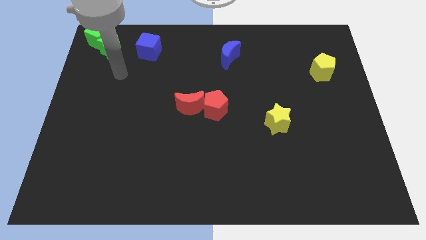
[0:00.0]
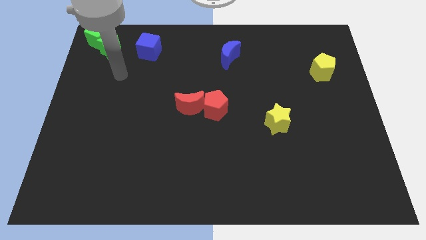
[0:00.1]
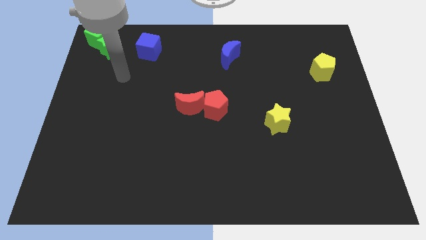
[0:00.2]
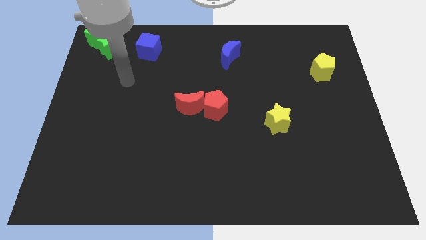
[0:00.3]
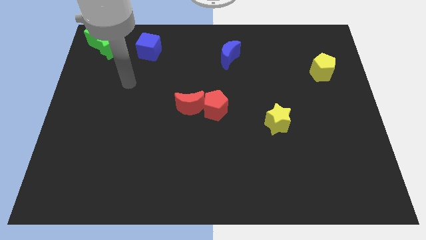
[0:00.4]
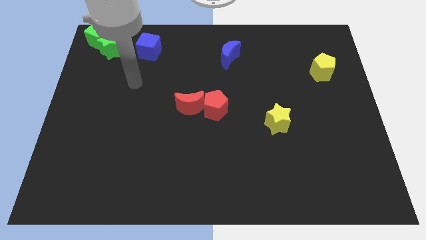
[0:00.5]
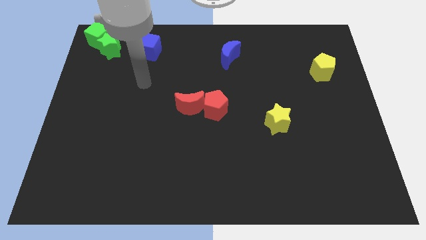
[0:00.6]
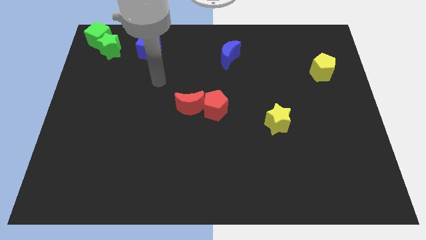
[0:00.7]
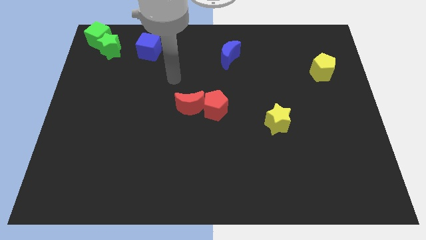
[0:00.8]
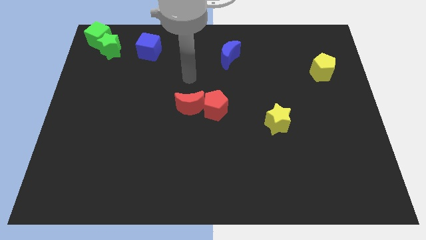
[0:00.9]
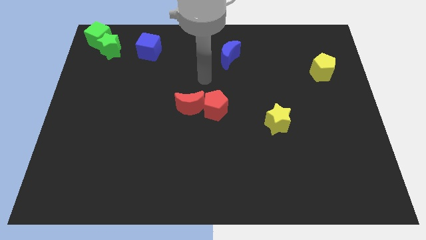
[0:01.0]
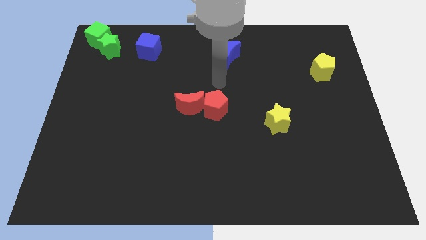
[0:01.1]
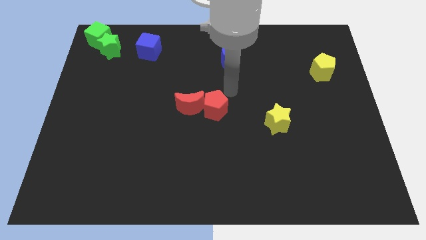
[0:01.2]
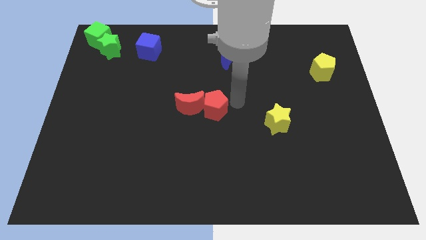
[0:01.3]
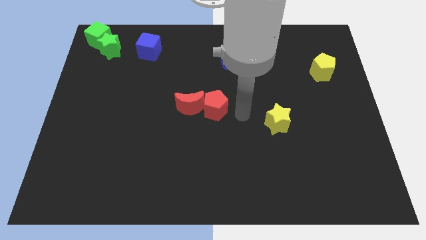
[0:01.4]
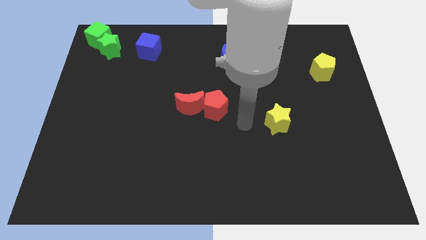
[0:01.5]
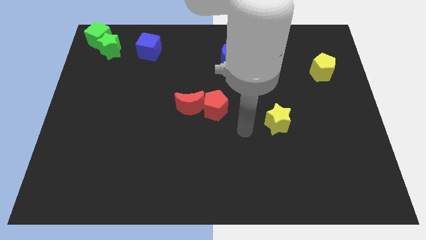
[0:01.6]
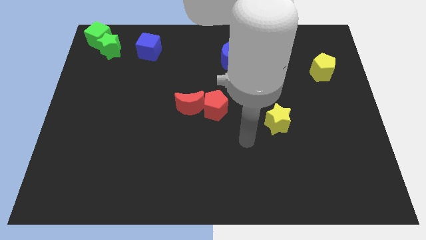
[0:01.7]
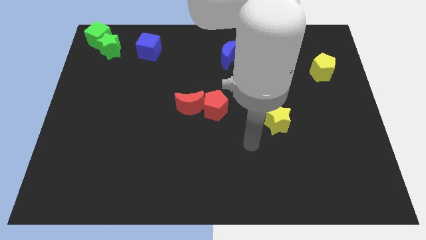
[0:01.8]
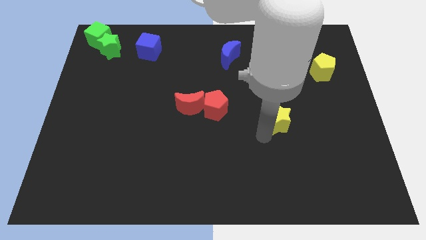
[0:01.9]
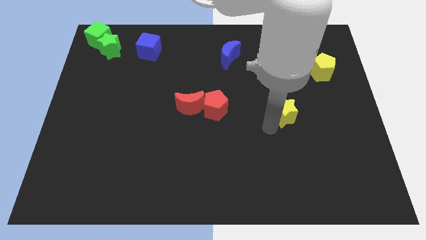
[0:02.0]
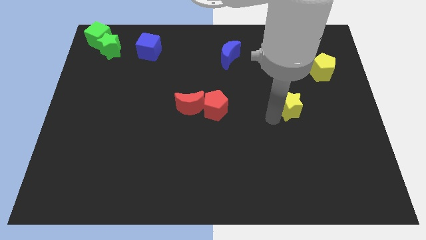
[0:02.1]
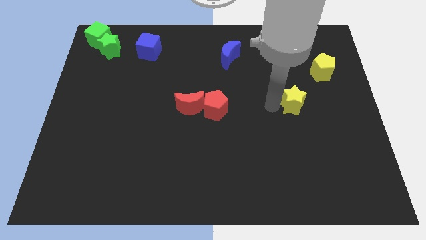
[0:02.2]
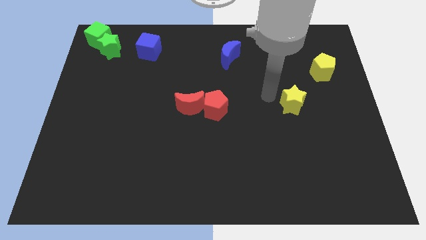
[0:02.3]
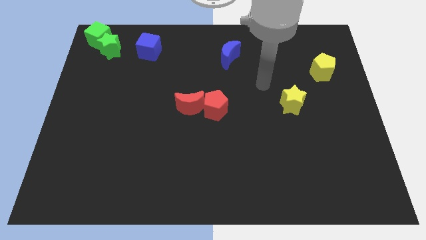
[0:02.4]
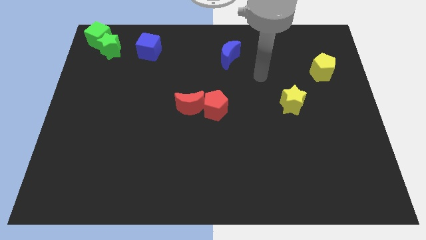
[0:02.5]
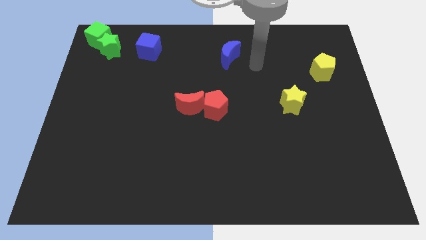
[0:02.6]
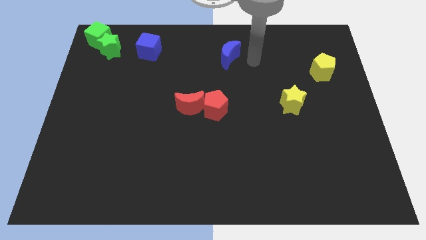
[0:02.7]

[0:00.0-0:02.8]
push the yellow star towards the yellow pentagon

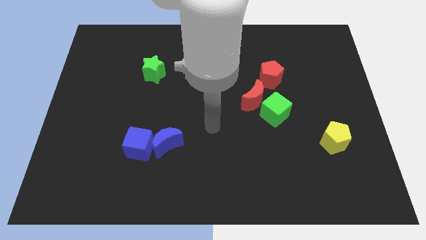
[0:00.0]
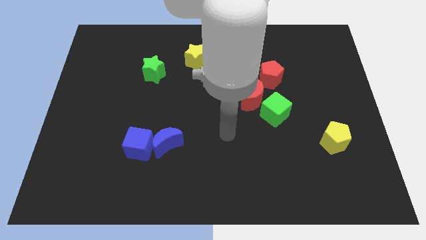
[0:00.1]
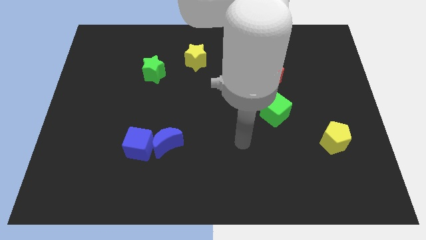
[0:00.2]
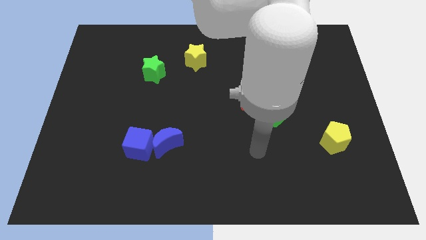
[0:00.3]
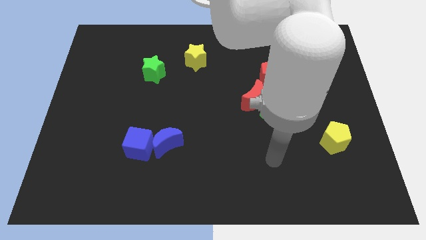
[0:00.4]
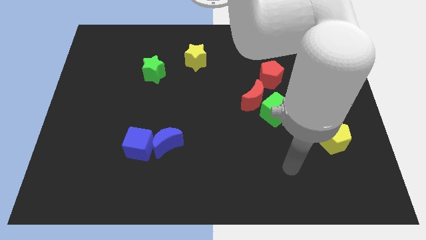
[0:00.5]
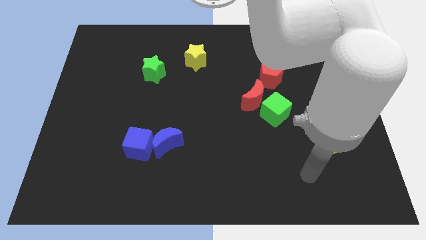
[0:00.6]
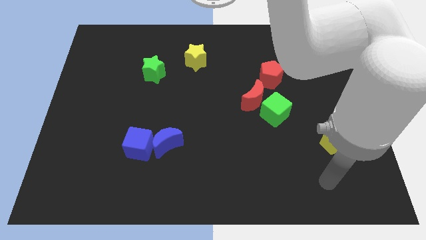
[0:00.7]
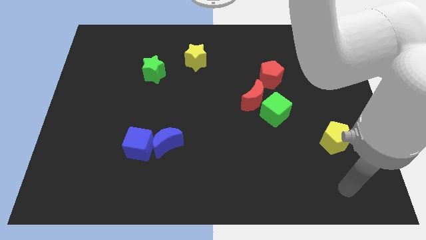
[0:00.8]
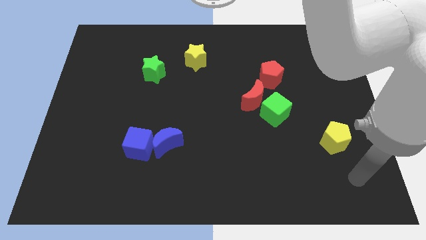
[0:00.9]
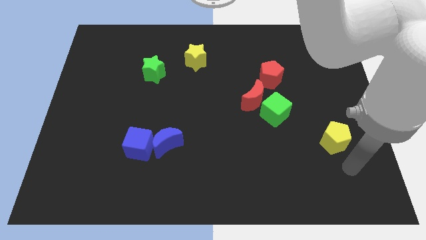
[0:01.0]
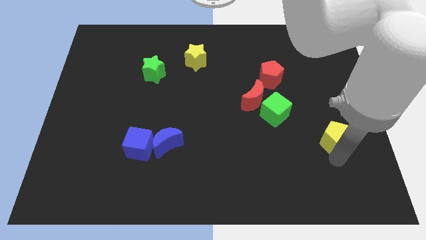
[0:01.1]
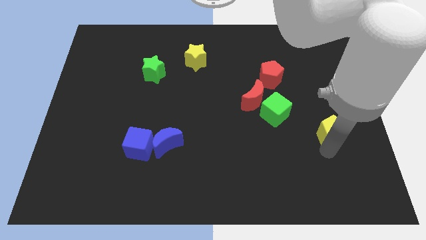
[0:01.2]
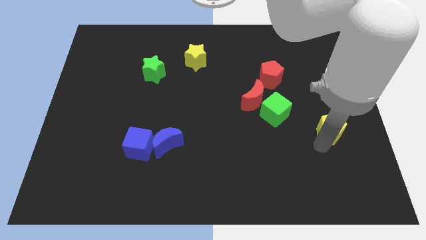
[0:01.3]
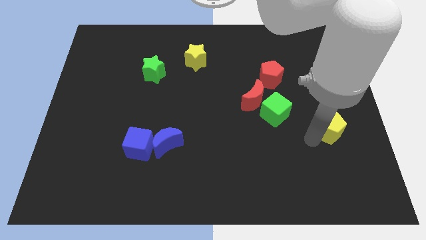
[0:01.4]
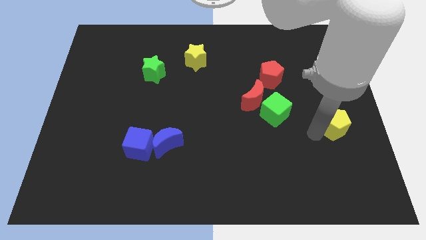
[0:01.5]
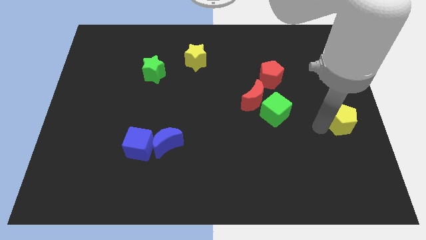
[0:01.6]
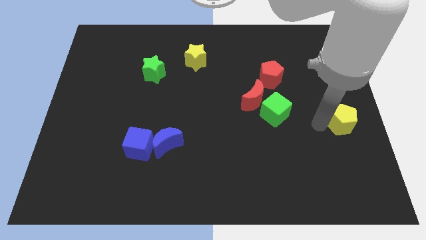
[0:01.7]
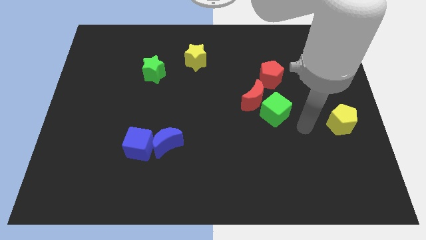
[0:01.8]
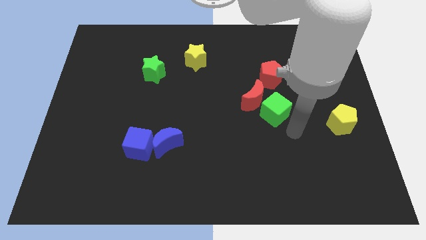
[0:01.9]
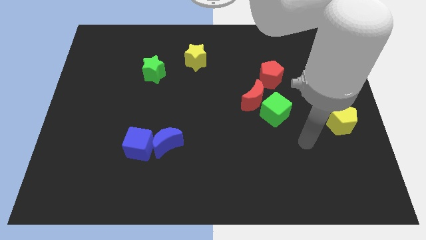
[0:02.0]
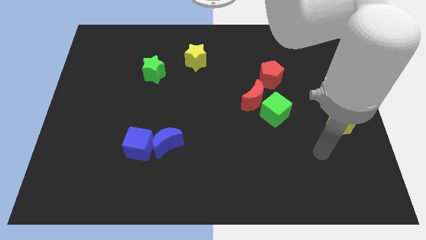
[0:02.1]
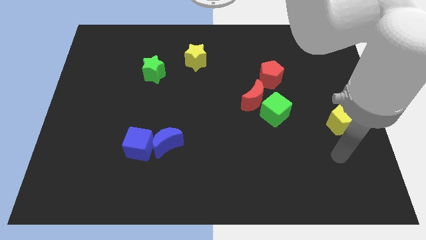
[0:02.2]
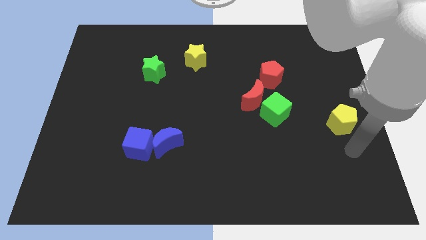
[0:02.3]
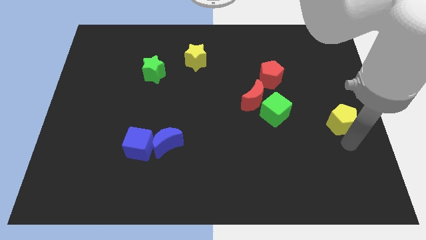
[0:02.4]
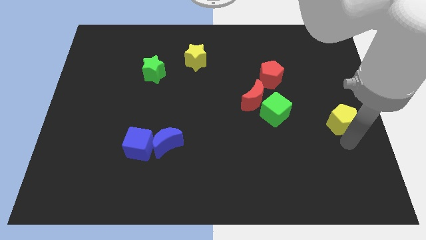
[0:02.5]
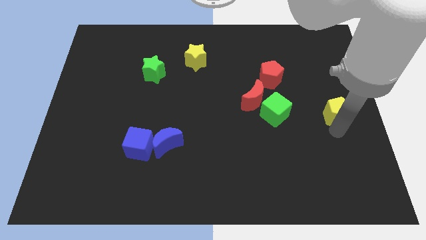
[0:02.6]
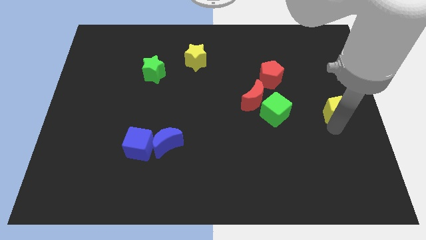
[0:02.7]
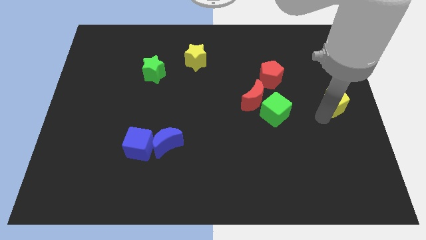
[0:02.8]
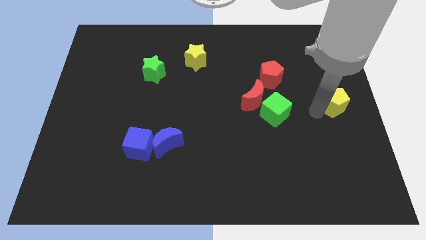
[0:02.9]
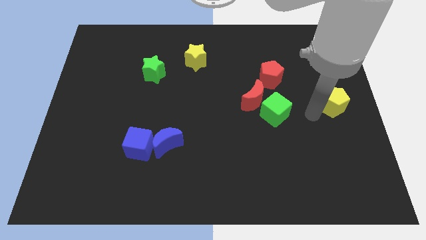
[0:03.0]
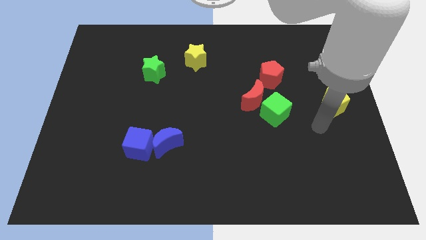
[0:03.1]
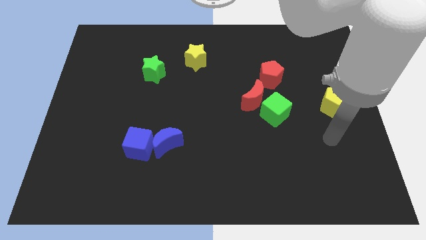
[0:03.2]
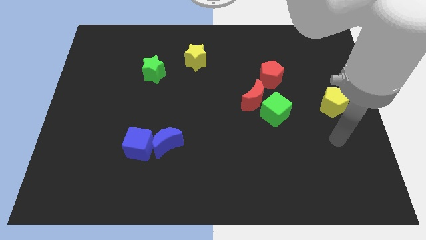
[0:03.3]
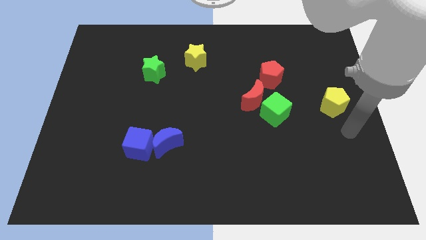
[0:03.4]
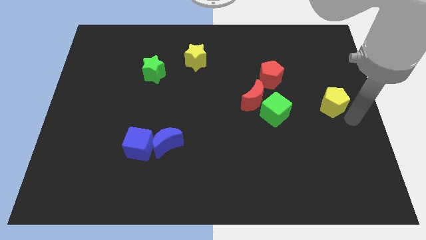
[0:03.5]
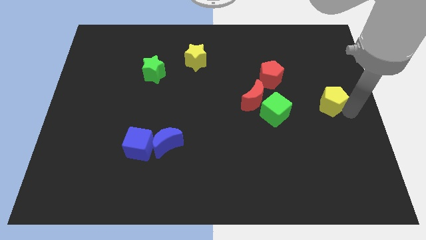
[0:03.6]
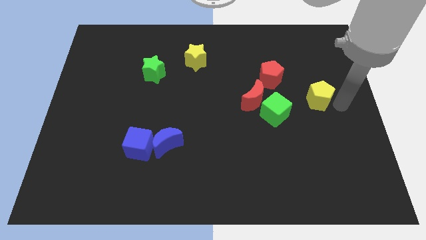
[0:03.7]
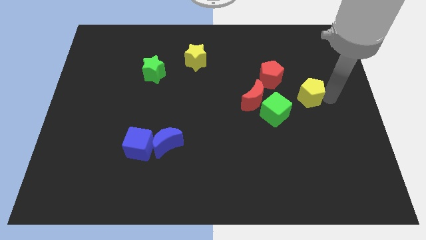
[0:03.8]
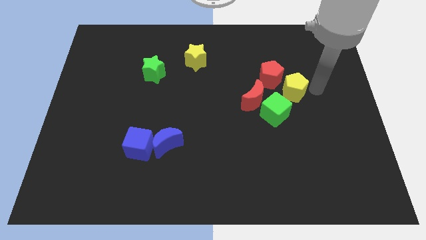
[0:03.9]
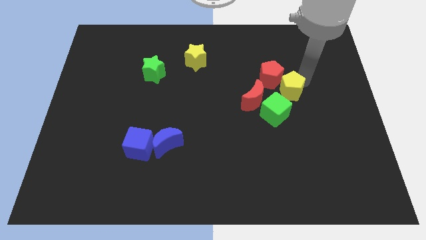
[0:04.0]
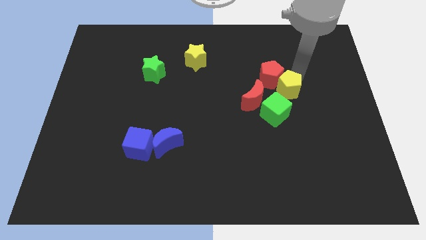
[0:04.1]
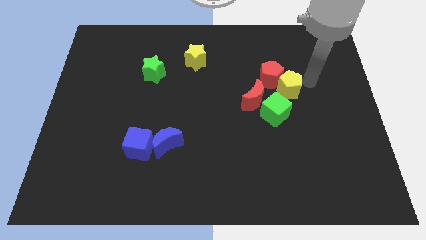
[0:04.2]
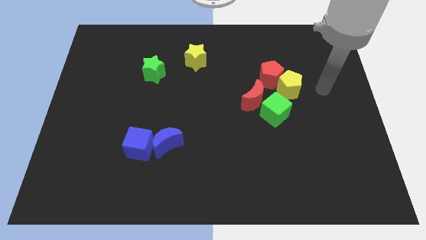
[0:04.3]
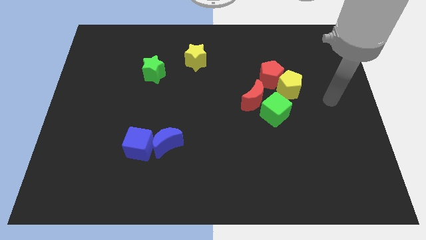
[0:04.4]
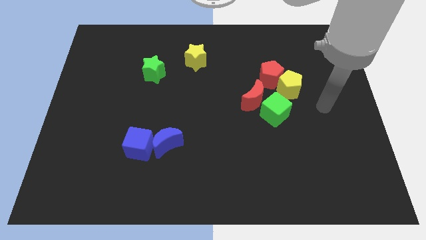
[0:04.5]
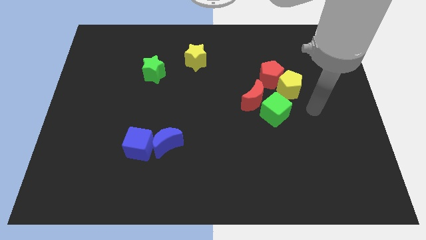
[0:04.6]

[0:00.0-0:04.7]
make the yellow pentagon to touch the red pentagon

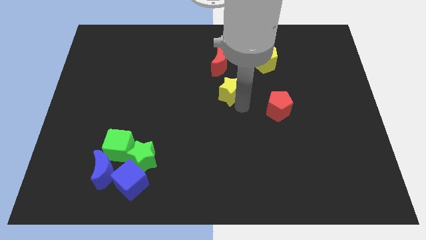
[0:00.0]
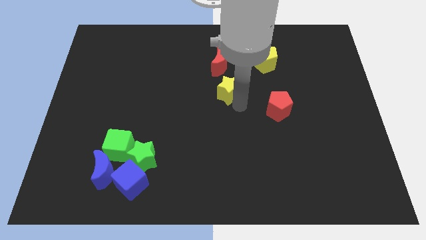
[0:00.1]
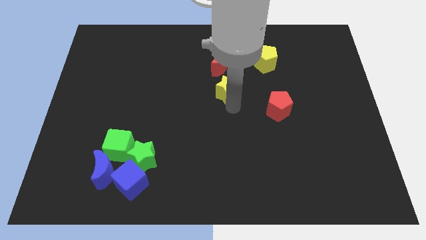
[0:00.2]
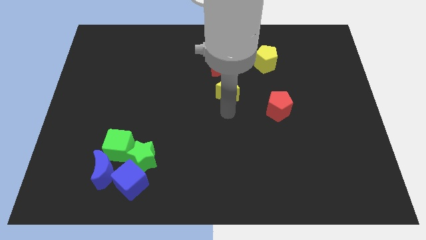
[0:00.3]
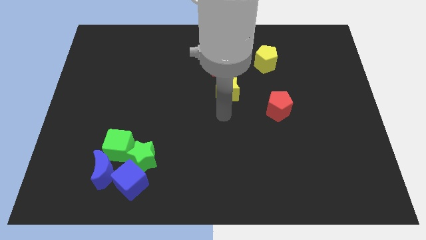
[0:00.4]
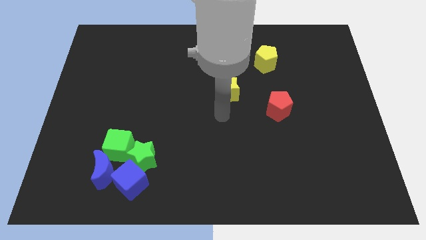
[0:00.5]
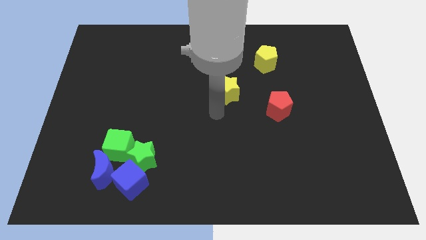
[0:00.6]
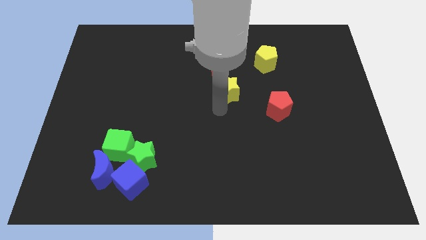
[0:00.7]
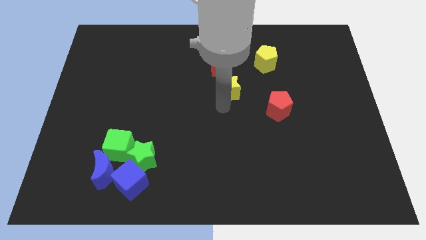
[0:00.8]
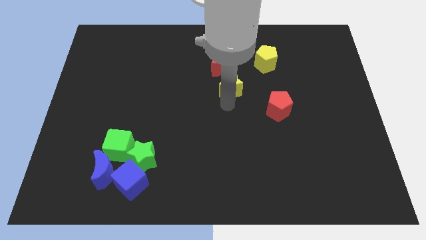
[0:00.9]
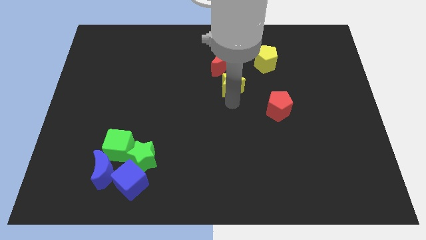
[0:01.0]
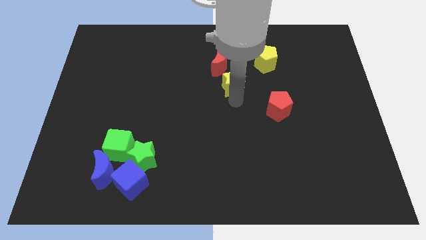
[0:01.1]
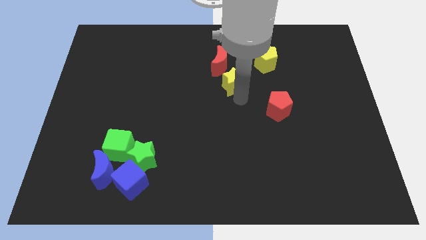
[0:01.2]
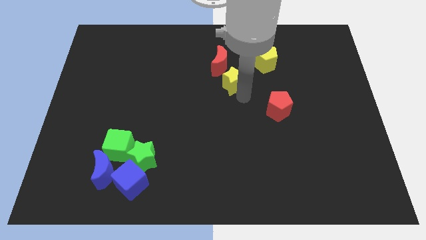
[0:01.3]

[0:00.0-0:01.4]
place the yellow star in between the red moon and red pentagon
